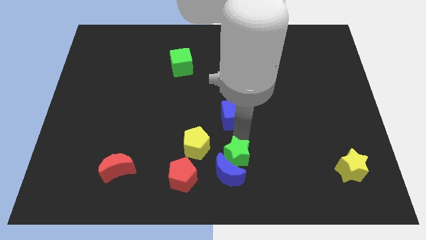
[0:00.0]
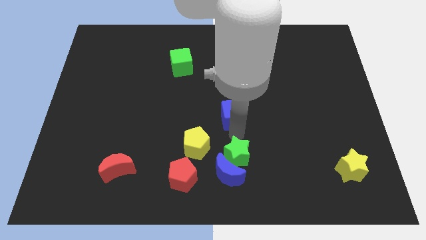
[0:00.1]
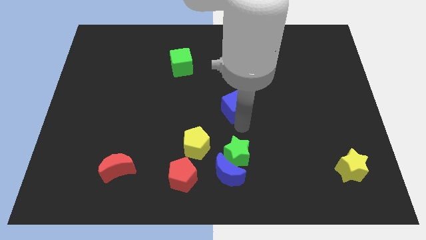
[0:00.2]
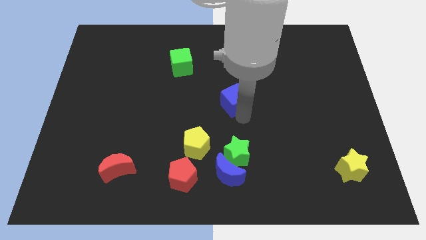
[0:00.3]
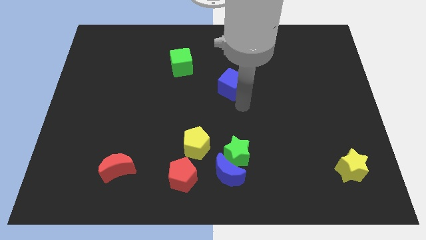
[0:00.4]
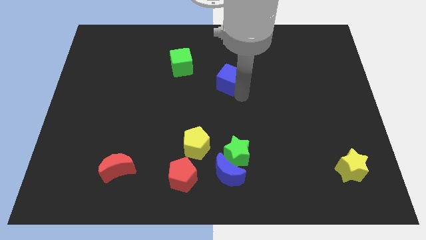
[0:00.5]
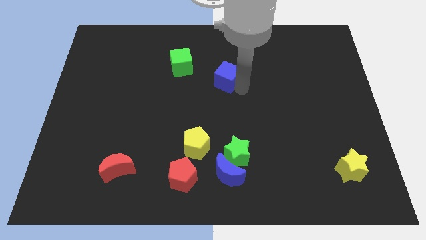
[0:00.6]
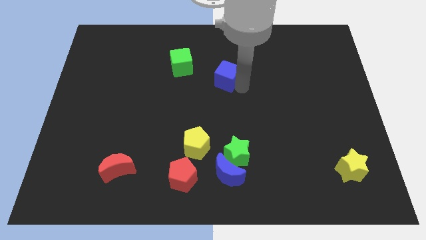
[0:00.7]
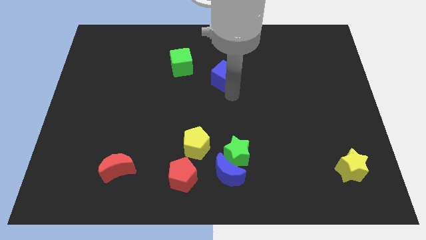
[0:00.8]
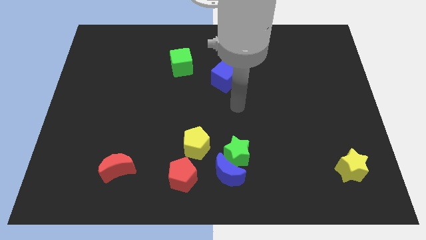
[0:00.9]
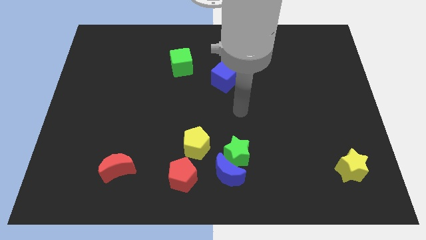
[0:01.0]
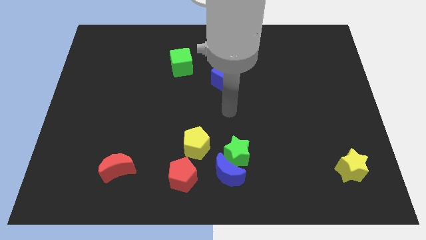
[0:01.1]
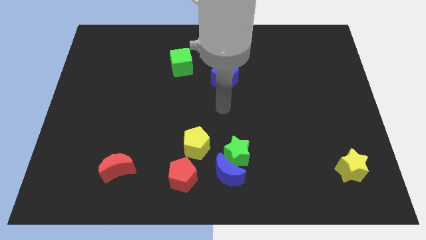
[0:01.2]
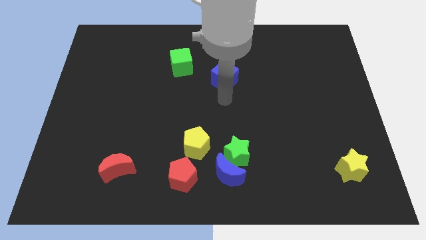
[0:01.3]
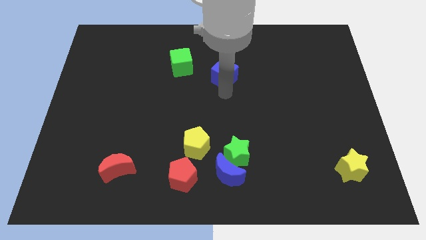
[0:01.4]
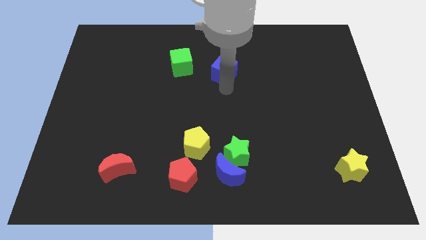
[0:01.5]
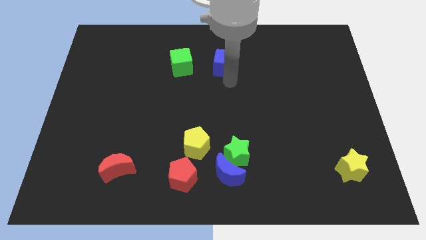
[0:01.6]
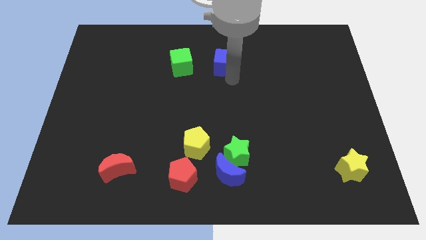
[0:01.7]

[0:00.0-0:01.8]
place blue cube beside green cube

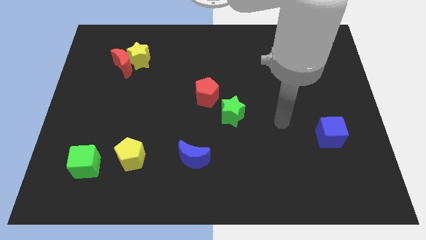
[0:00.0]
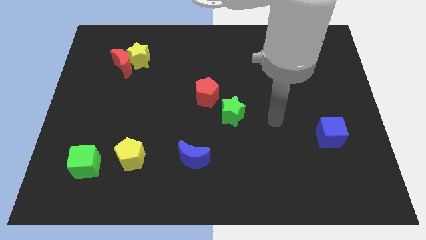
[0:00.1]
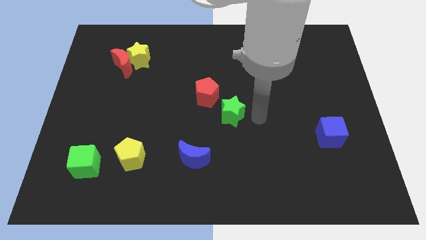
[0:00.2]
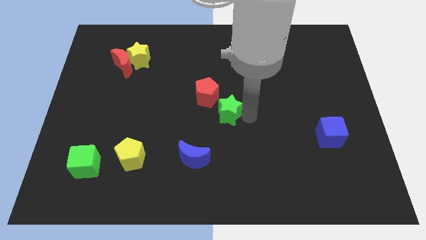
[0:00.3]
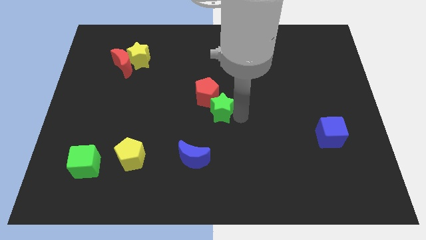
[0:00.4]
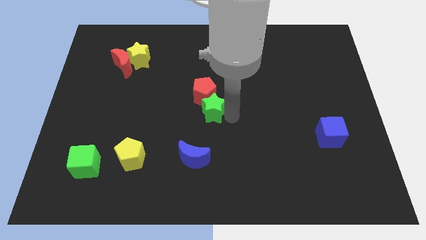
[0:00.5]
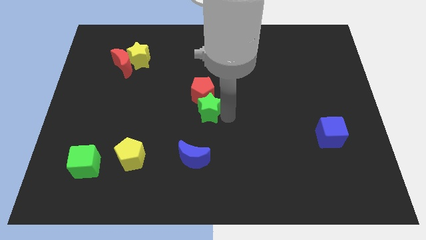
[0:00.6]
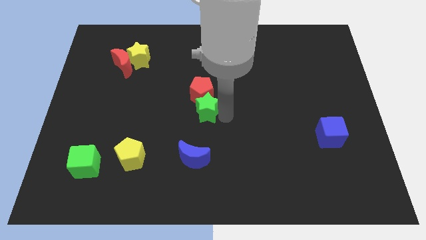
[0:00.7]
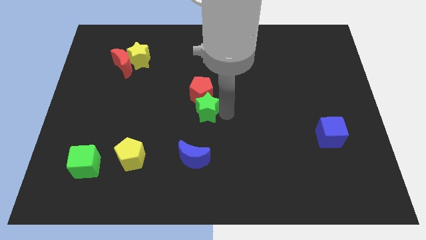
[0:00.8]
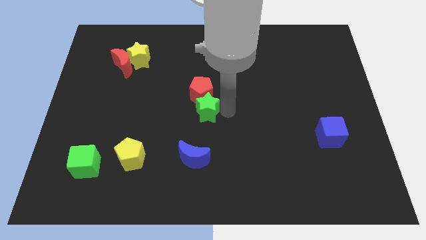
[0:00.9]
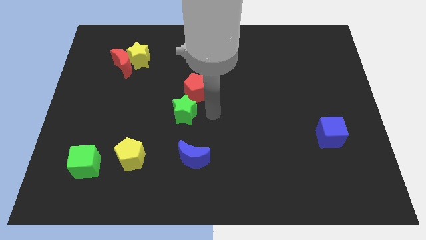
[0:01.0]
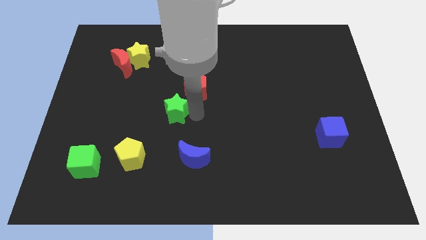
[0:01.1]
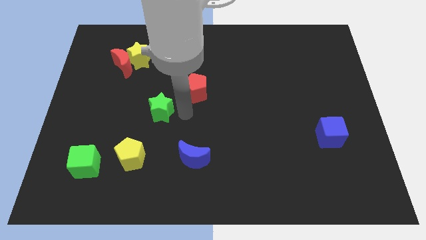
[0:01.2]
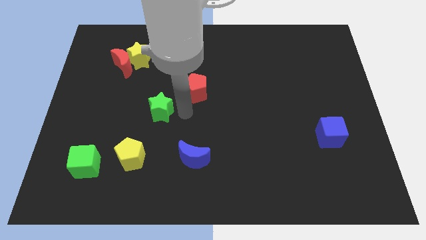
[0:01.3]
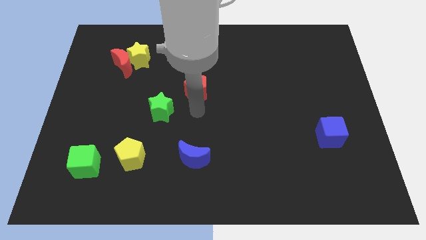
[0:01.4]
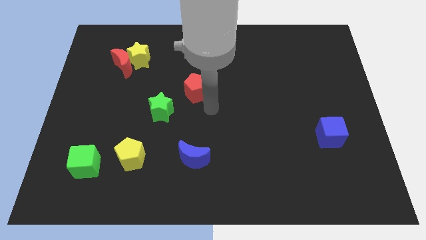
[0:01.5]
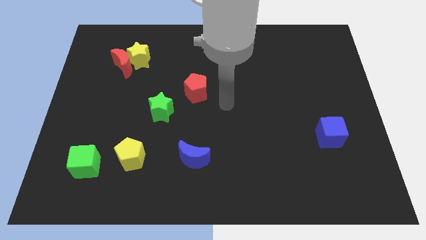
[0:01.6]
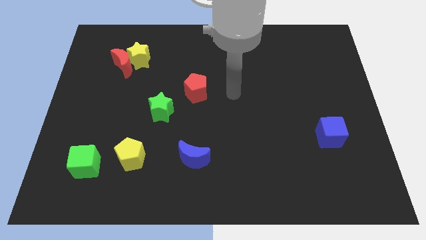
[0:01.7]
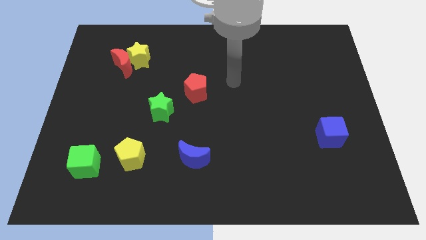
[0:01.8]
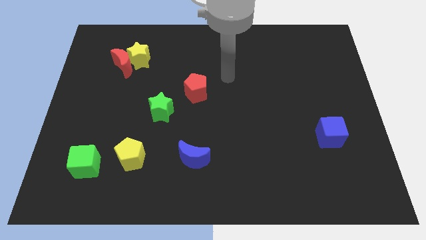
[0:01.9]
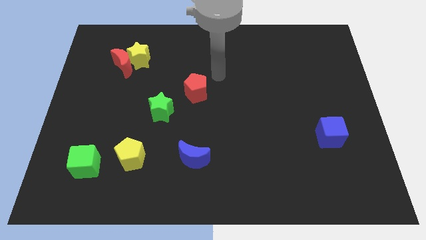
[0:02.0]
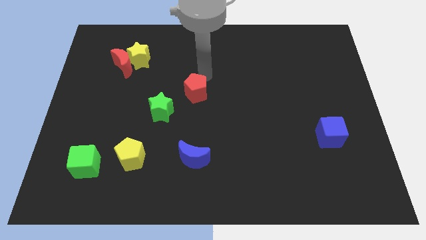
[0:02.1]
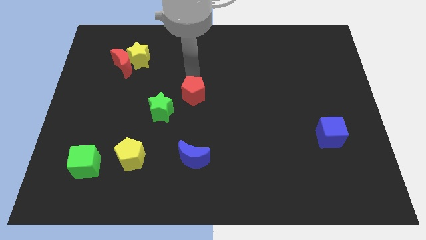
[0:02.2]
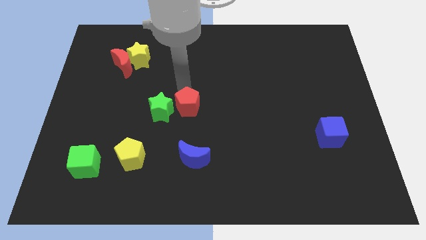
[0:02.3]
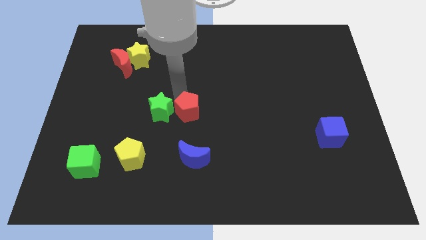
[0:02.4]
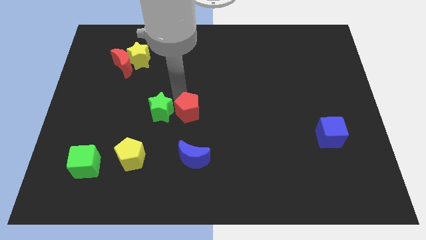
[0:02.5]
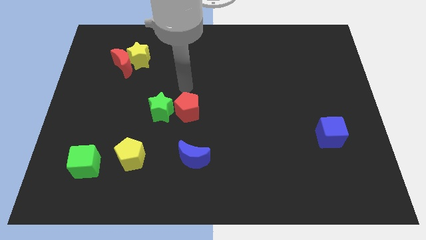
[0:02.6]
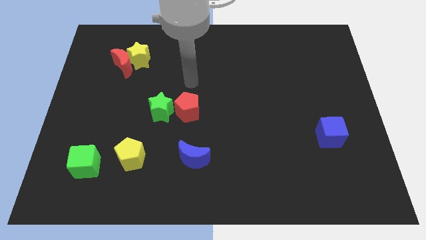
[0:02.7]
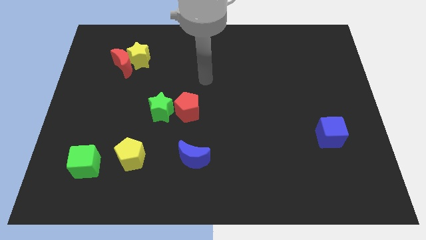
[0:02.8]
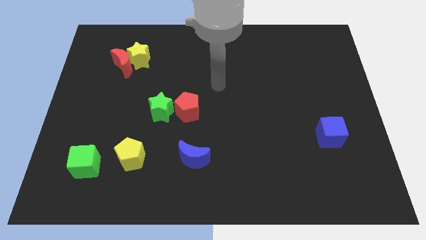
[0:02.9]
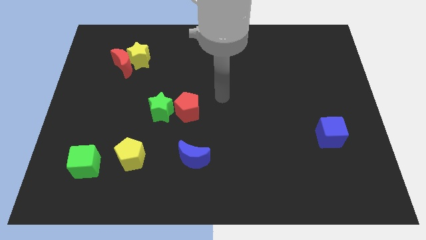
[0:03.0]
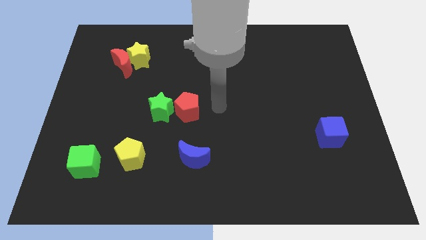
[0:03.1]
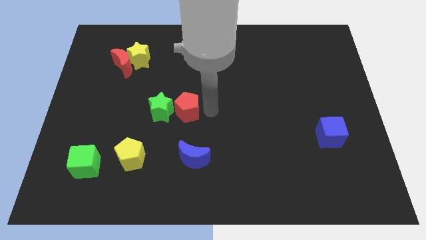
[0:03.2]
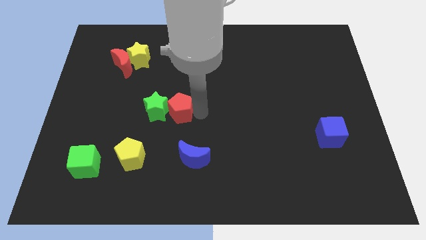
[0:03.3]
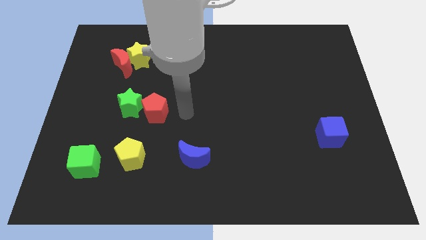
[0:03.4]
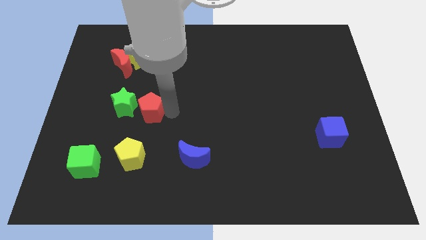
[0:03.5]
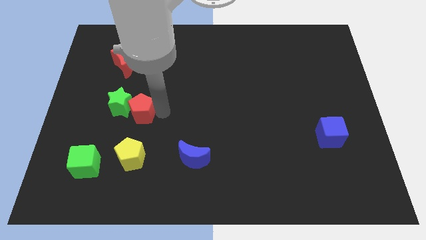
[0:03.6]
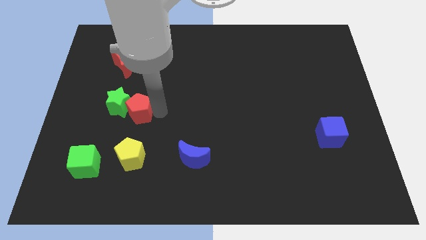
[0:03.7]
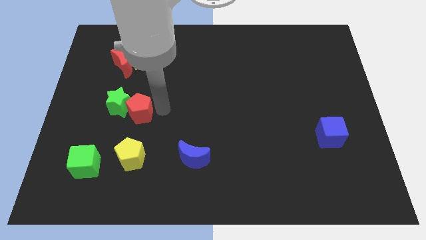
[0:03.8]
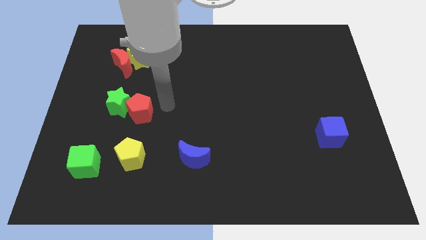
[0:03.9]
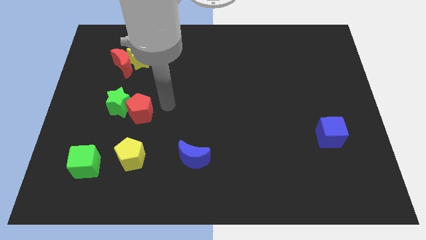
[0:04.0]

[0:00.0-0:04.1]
move the red crescent along with the green star towards the top of the yellow pentagon

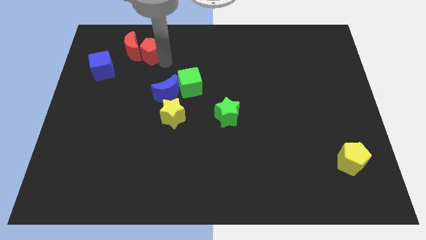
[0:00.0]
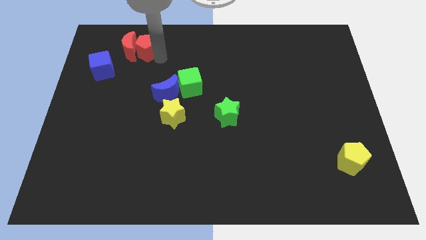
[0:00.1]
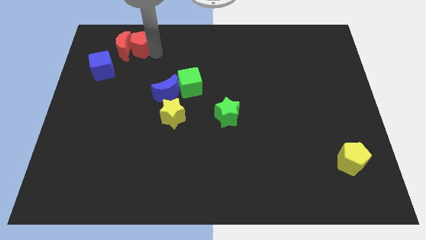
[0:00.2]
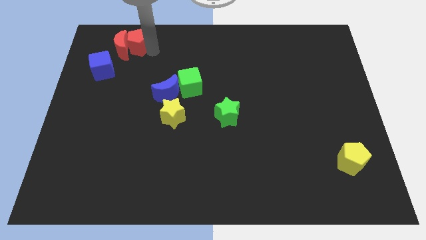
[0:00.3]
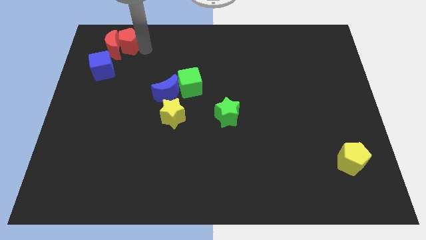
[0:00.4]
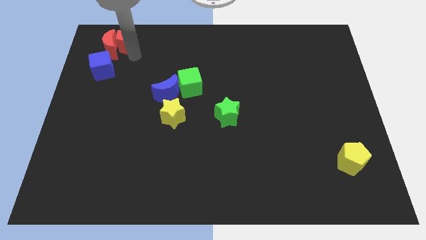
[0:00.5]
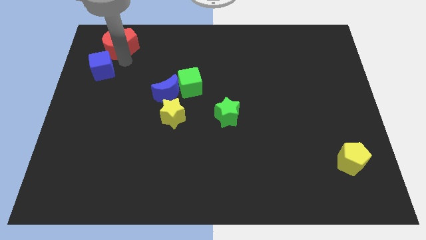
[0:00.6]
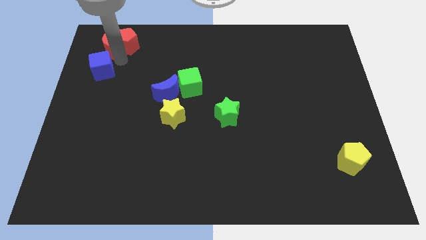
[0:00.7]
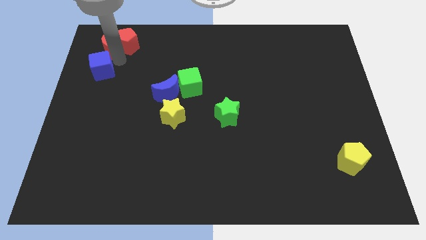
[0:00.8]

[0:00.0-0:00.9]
move red blocks towards top left

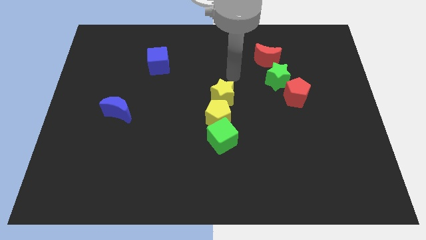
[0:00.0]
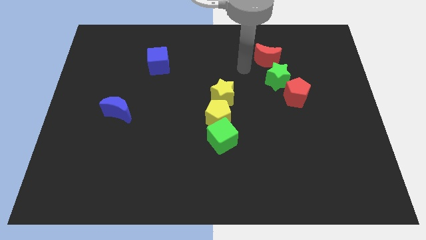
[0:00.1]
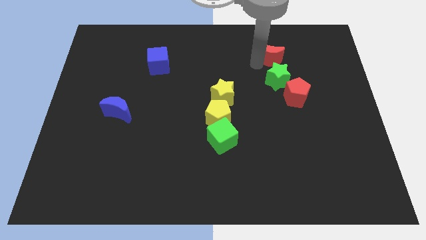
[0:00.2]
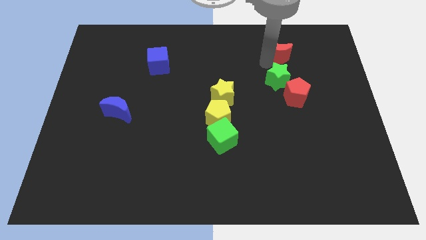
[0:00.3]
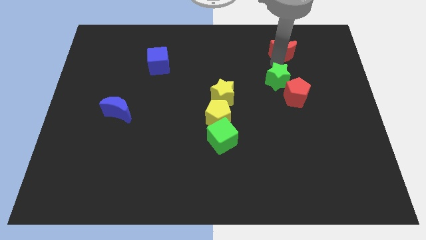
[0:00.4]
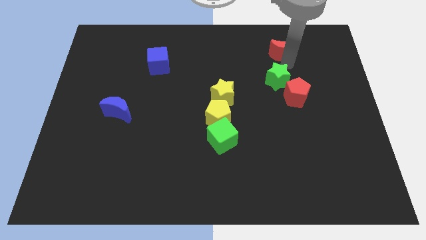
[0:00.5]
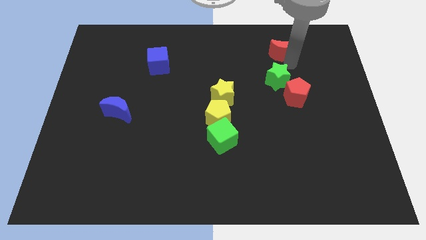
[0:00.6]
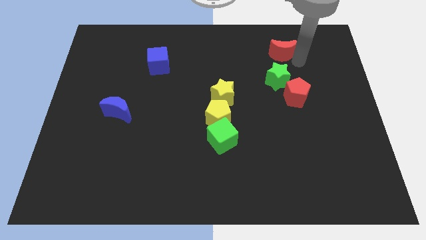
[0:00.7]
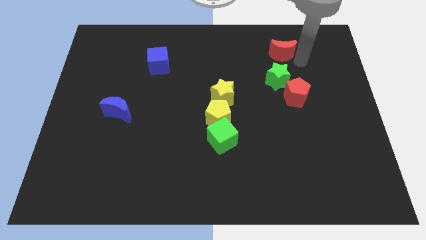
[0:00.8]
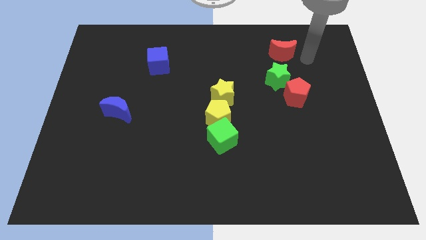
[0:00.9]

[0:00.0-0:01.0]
slightly move the red moon up

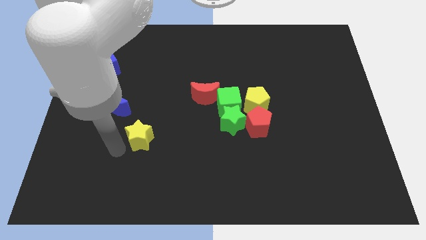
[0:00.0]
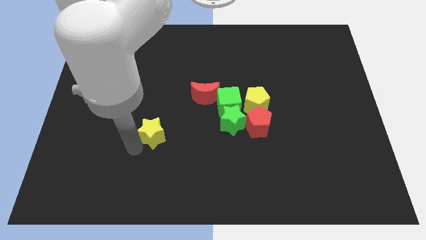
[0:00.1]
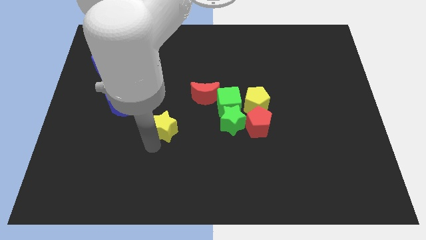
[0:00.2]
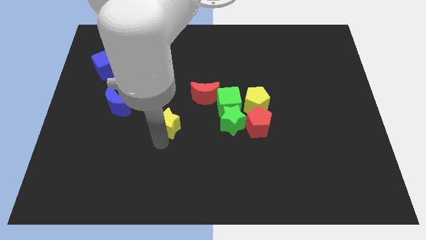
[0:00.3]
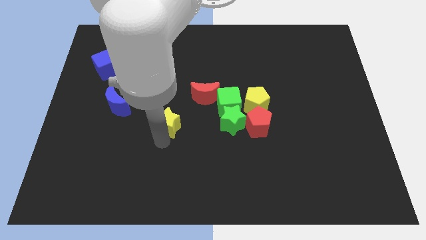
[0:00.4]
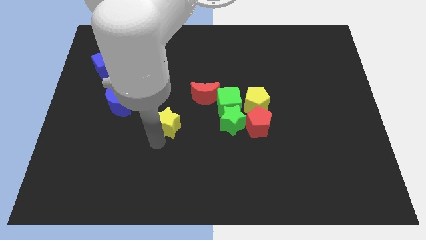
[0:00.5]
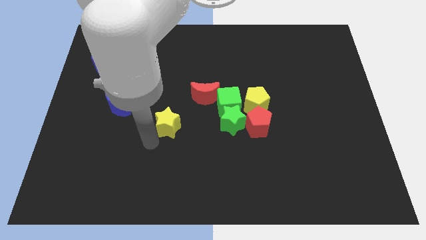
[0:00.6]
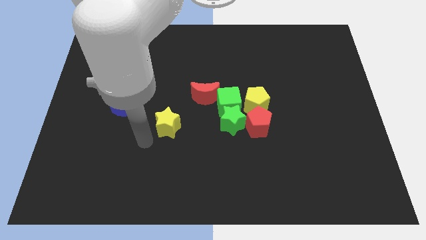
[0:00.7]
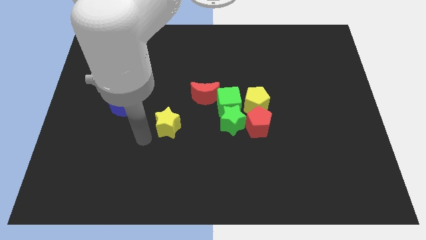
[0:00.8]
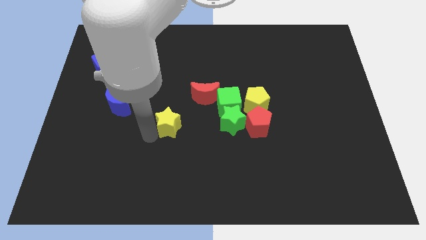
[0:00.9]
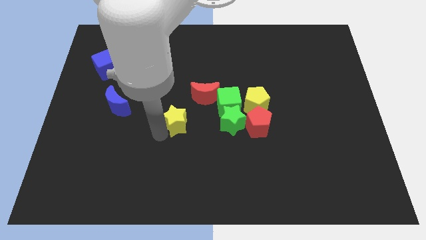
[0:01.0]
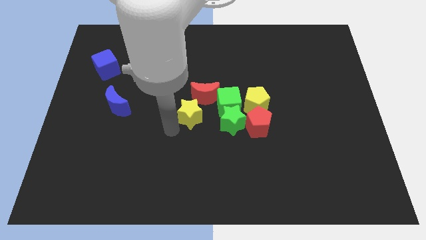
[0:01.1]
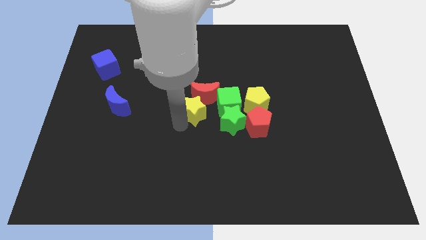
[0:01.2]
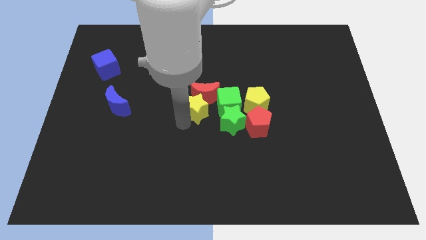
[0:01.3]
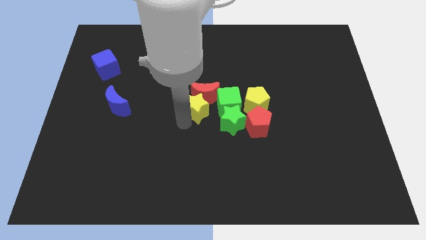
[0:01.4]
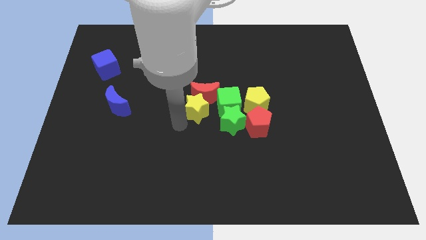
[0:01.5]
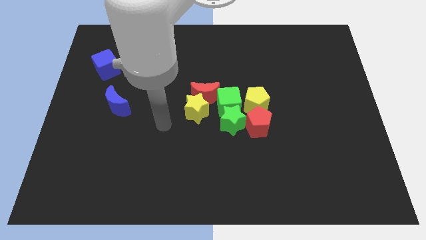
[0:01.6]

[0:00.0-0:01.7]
move the yellow star towards the red crescent
